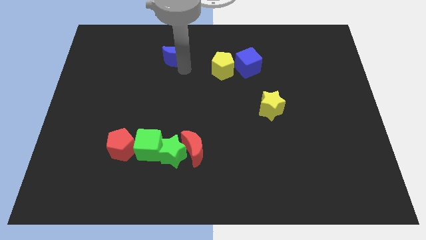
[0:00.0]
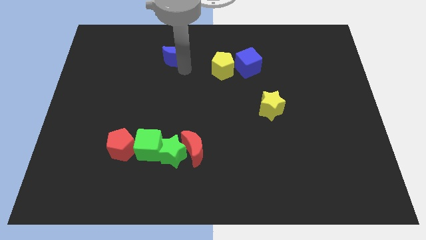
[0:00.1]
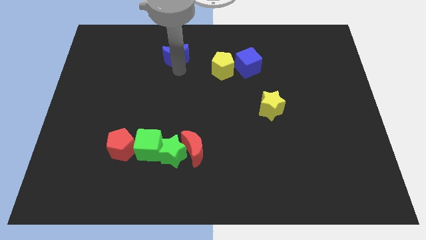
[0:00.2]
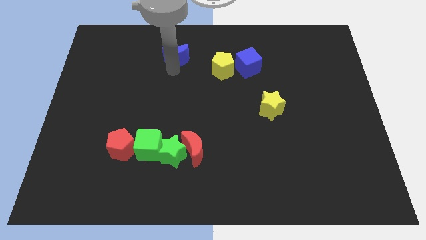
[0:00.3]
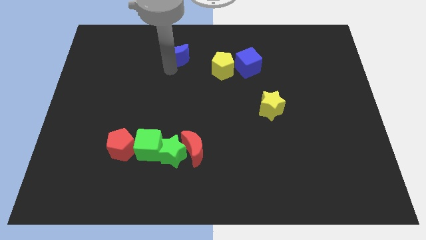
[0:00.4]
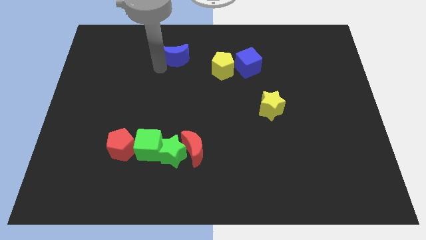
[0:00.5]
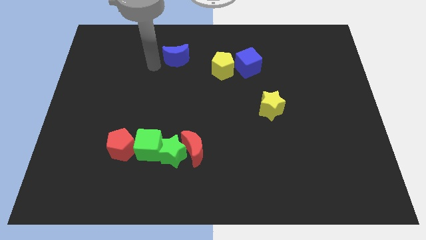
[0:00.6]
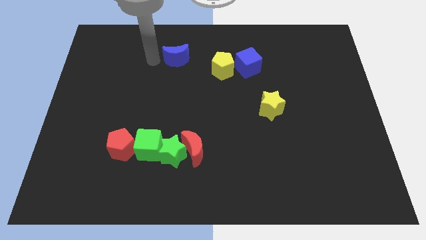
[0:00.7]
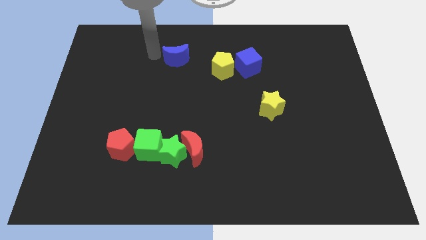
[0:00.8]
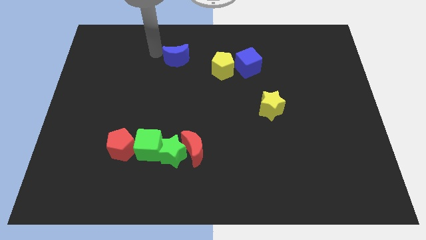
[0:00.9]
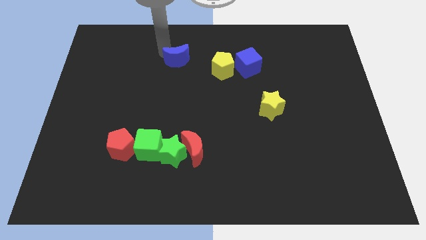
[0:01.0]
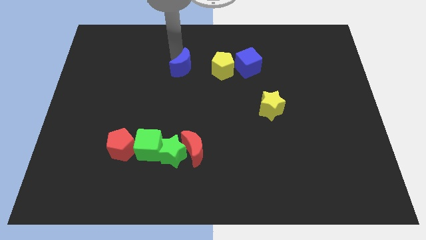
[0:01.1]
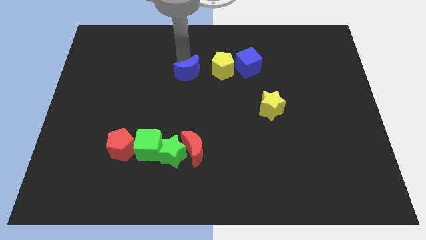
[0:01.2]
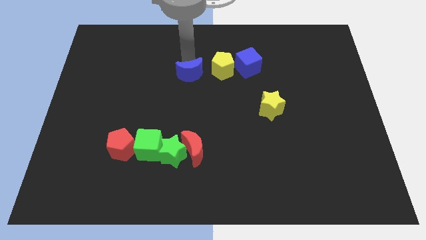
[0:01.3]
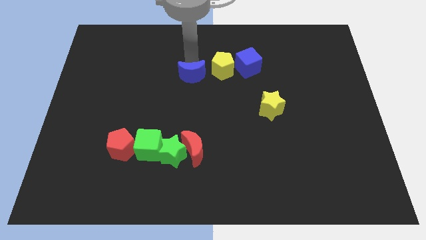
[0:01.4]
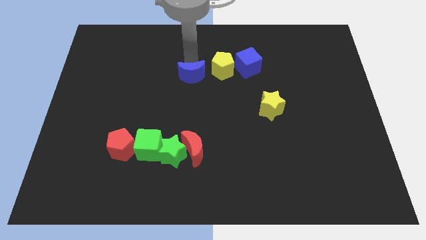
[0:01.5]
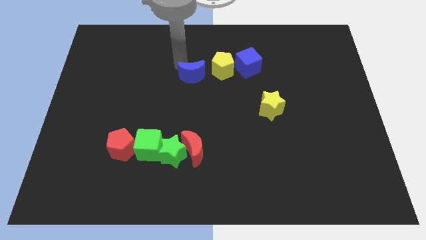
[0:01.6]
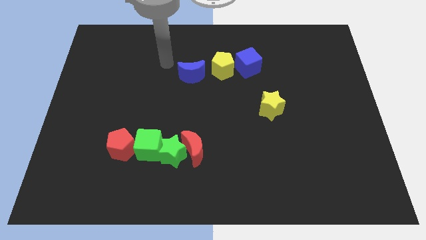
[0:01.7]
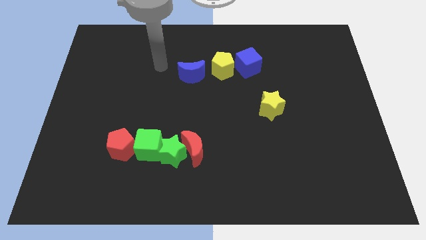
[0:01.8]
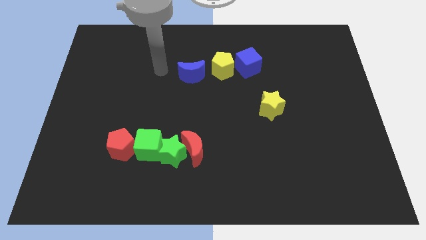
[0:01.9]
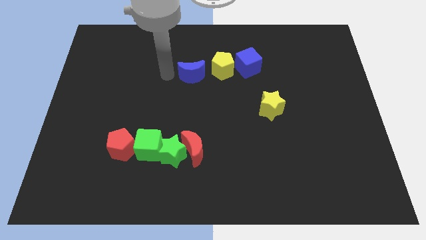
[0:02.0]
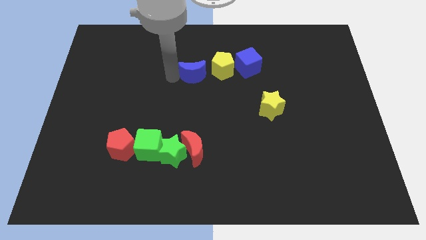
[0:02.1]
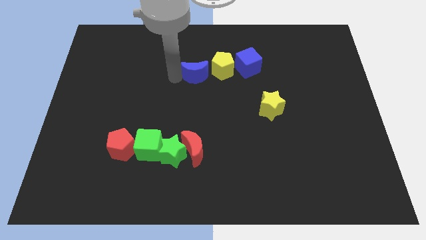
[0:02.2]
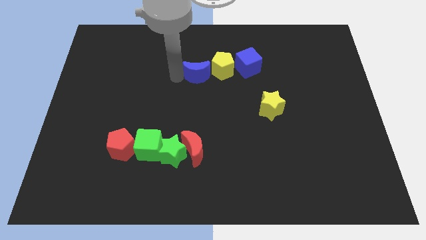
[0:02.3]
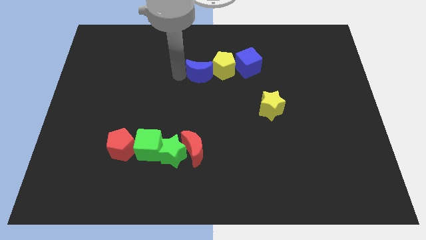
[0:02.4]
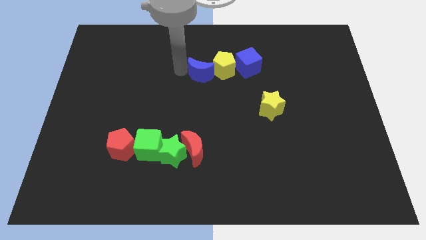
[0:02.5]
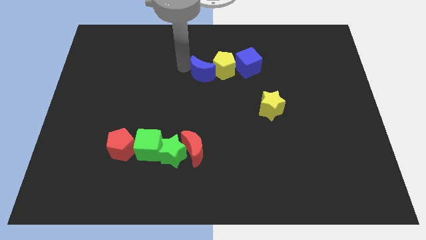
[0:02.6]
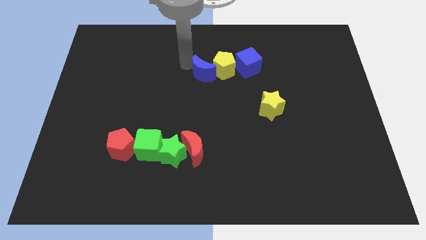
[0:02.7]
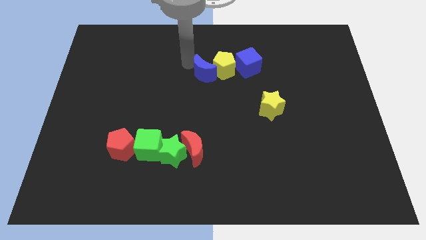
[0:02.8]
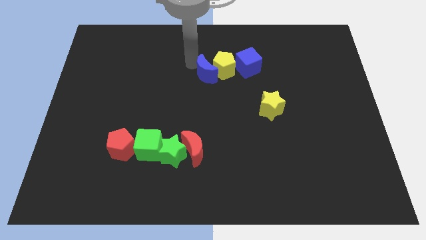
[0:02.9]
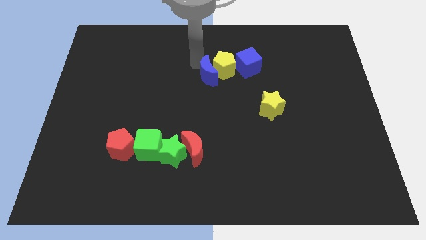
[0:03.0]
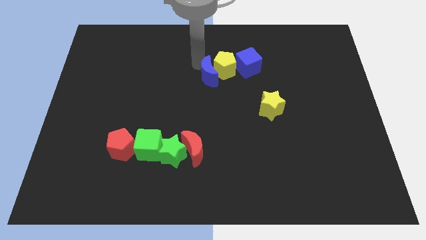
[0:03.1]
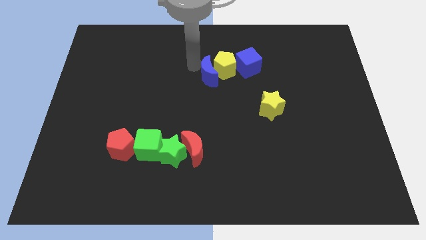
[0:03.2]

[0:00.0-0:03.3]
move the blue crescent into the yellow pentagon

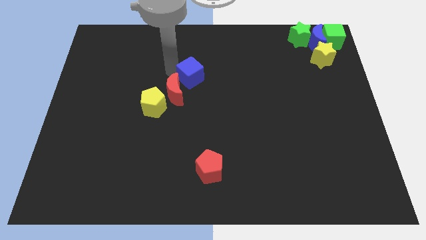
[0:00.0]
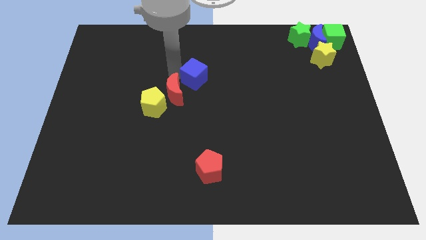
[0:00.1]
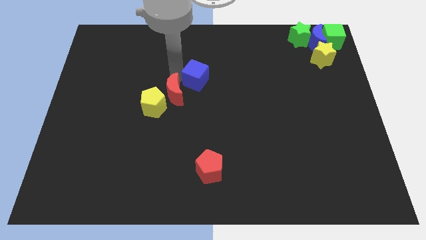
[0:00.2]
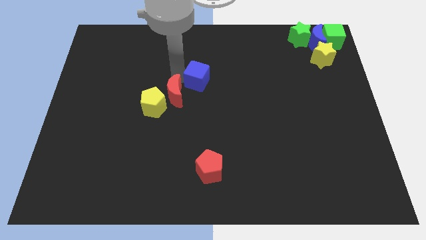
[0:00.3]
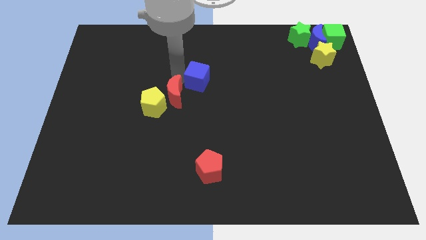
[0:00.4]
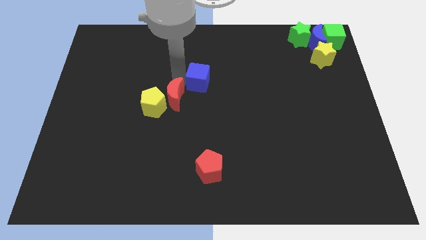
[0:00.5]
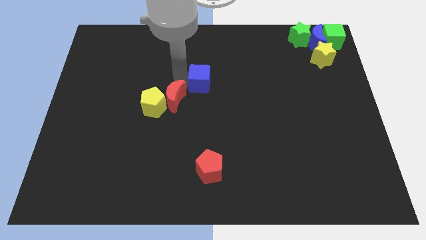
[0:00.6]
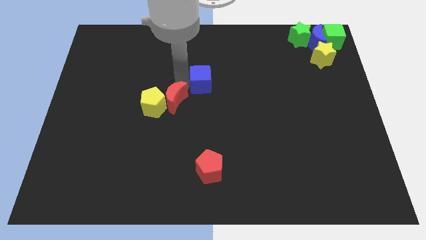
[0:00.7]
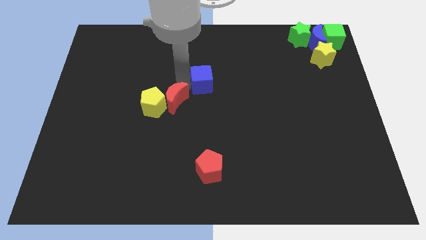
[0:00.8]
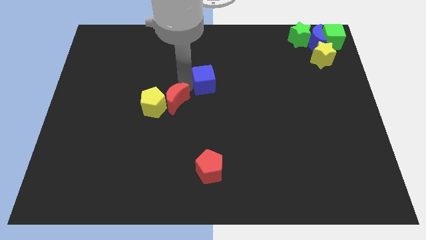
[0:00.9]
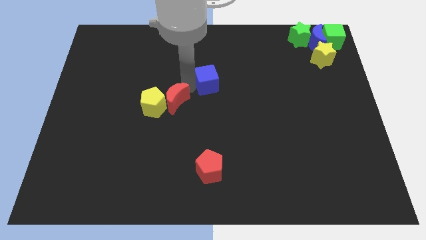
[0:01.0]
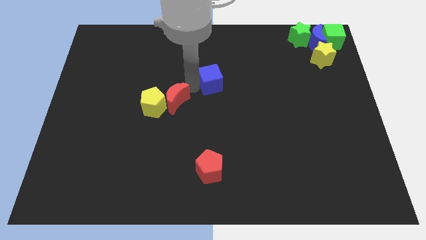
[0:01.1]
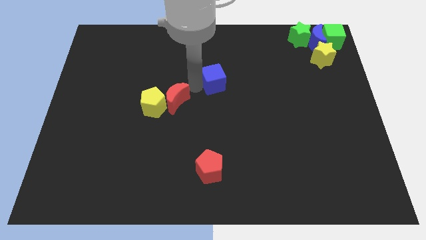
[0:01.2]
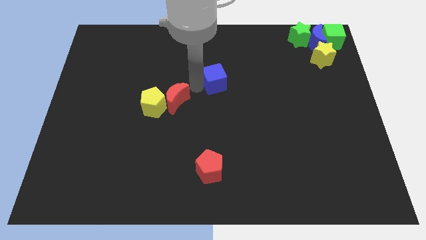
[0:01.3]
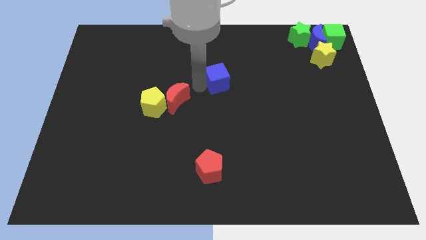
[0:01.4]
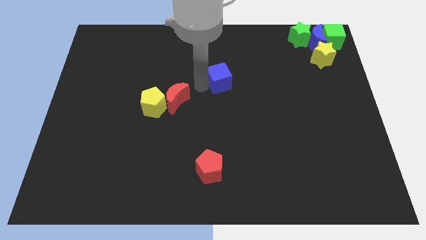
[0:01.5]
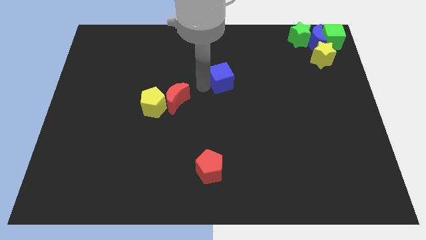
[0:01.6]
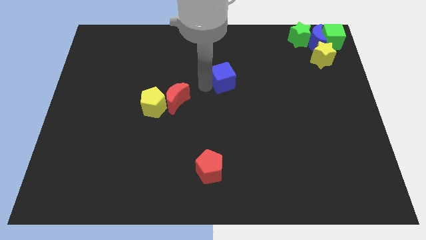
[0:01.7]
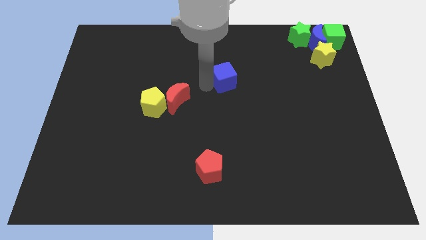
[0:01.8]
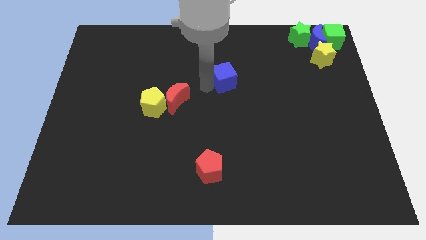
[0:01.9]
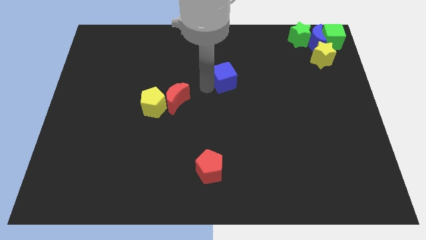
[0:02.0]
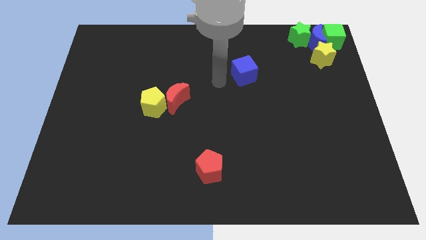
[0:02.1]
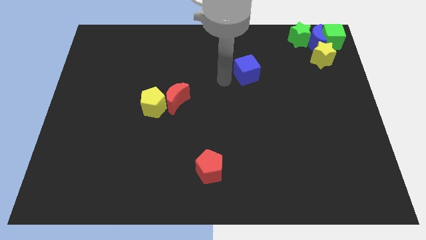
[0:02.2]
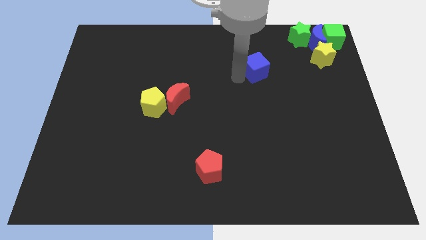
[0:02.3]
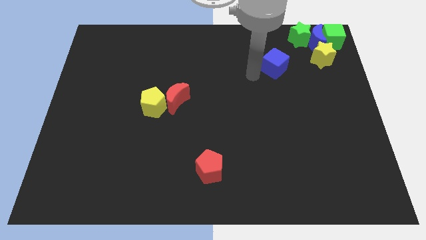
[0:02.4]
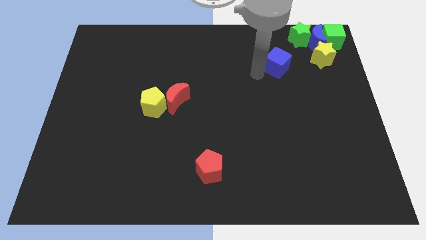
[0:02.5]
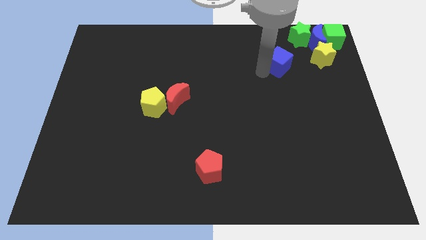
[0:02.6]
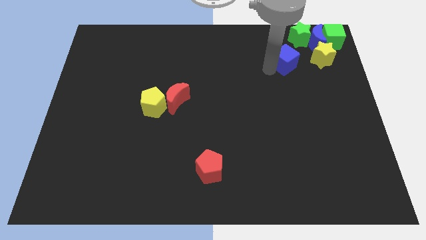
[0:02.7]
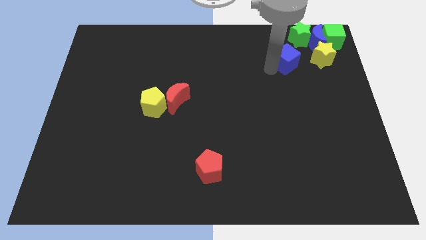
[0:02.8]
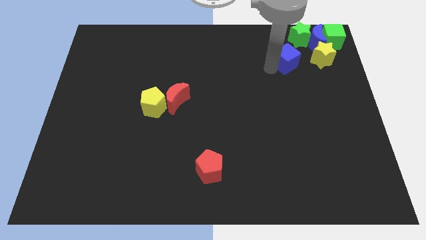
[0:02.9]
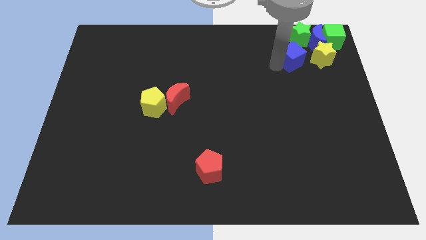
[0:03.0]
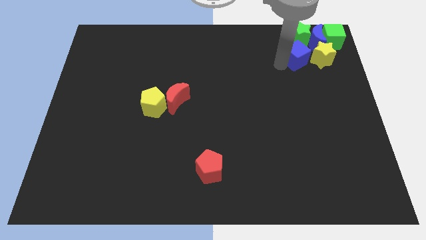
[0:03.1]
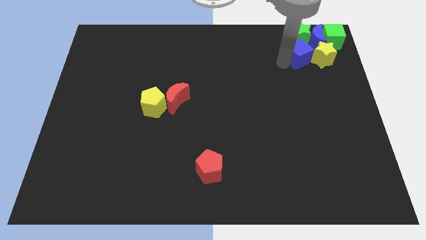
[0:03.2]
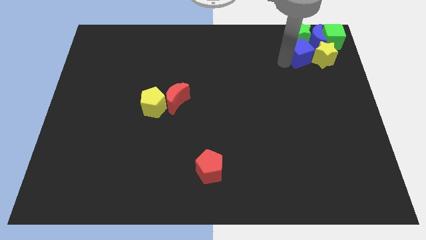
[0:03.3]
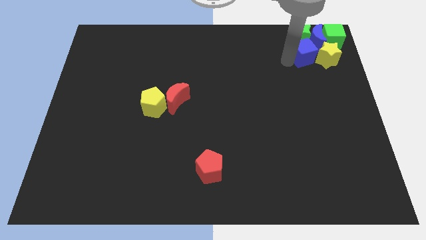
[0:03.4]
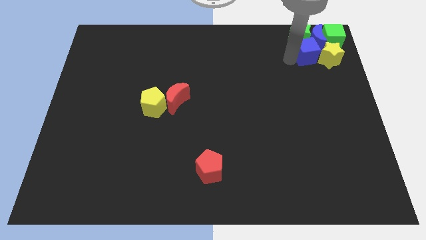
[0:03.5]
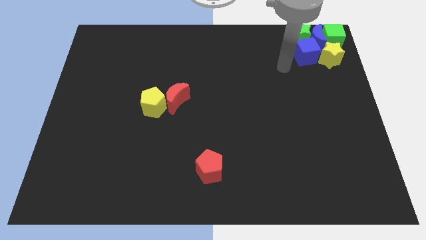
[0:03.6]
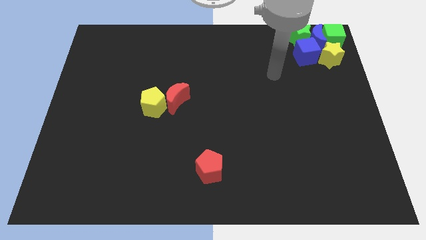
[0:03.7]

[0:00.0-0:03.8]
separate the blue cube towards the group of blocks at the top right corner

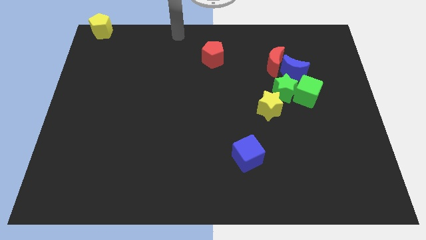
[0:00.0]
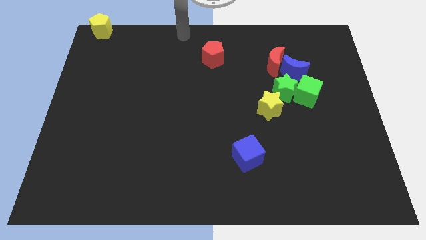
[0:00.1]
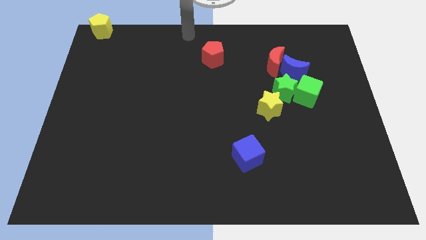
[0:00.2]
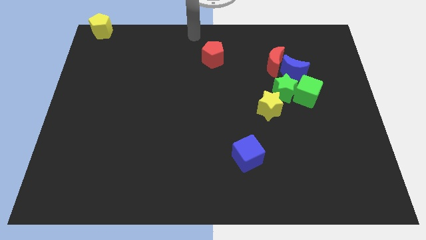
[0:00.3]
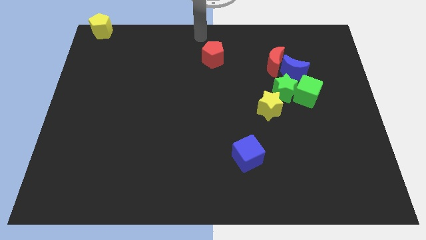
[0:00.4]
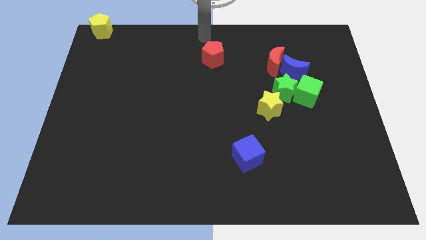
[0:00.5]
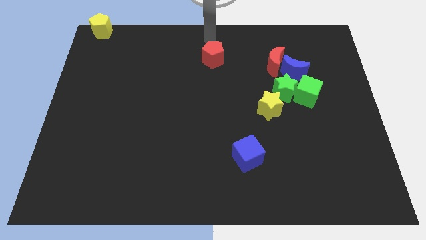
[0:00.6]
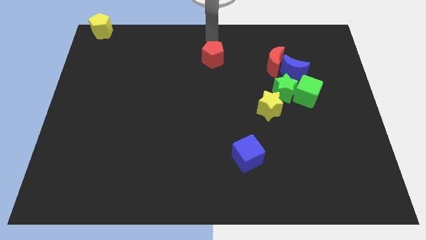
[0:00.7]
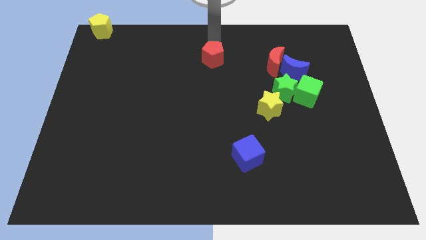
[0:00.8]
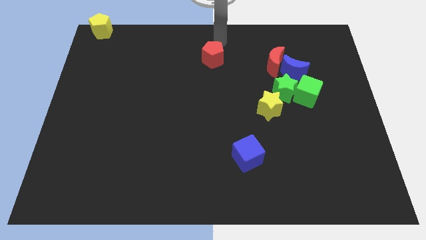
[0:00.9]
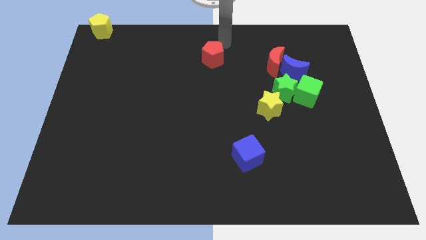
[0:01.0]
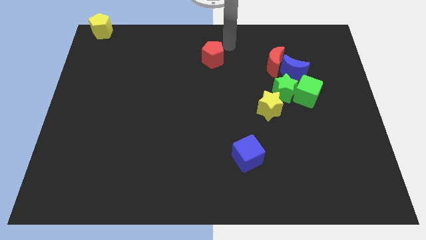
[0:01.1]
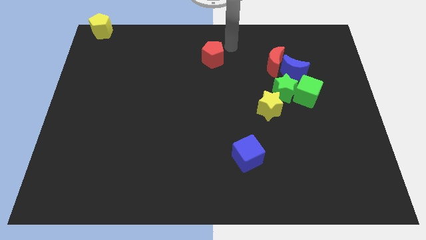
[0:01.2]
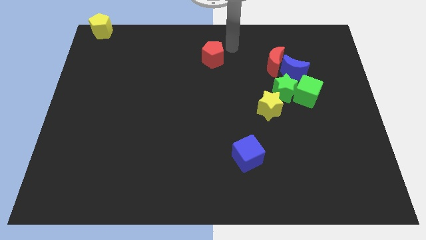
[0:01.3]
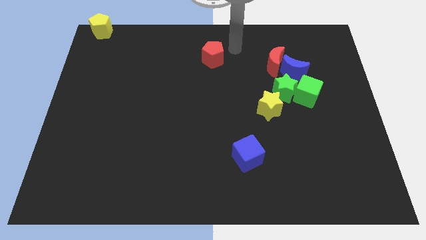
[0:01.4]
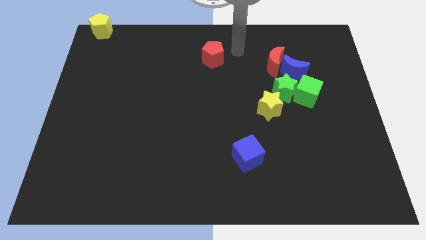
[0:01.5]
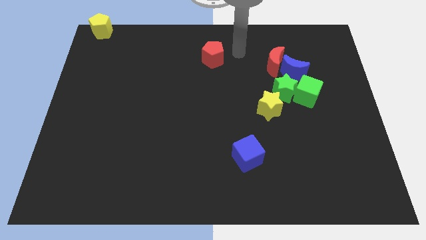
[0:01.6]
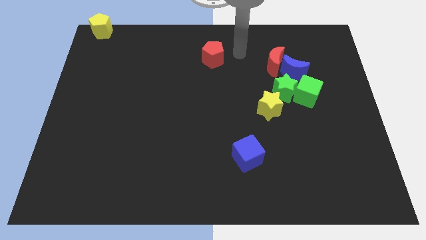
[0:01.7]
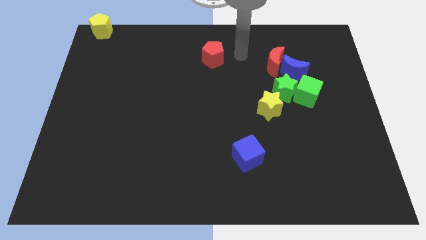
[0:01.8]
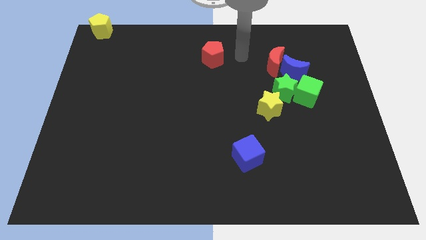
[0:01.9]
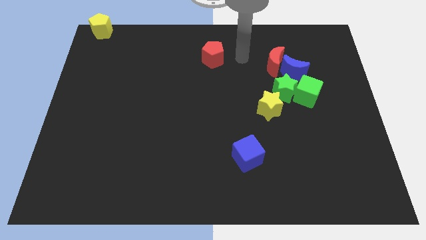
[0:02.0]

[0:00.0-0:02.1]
place your arm to the right of red pentagon
